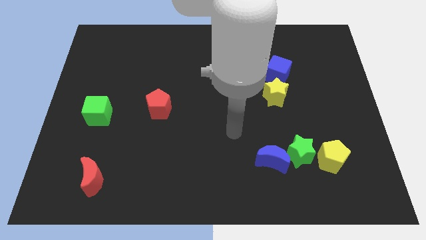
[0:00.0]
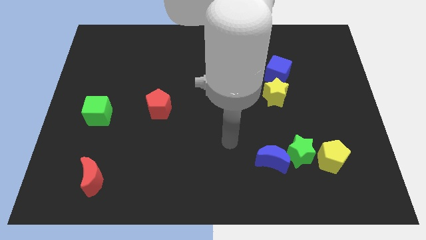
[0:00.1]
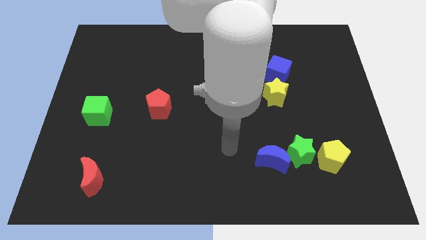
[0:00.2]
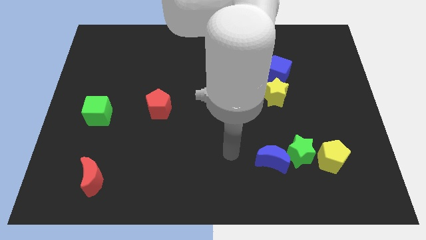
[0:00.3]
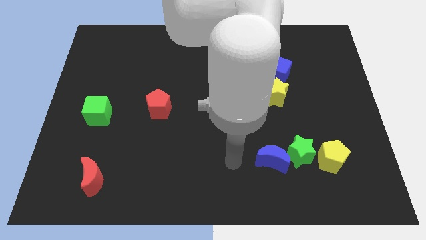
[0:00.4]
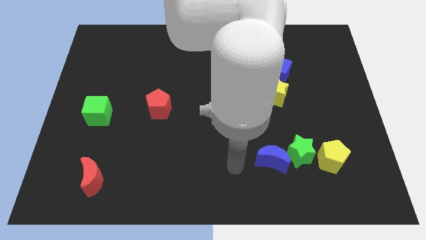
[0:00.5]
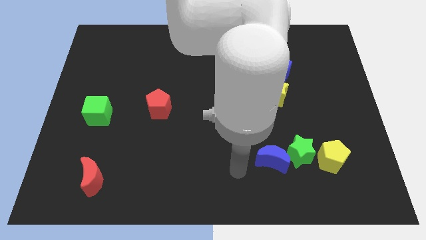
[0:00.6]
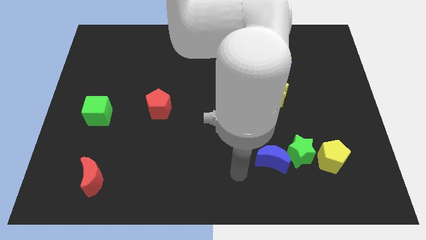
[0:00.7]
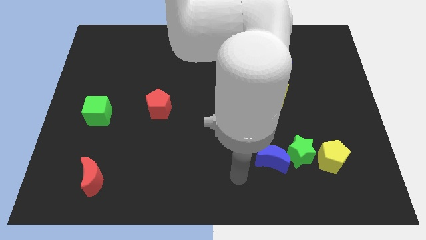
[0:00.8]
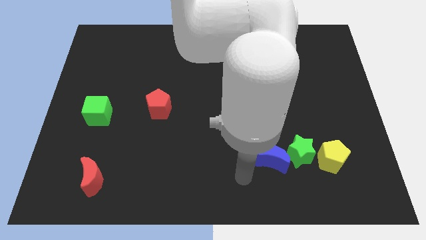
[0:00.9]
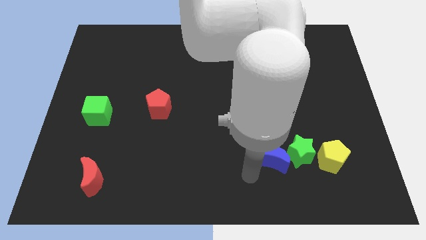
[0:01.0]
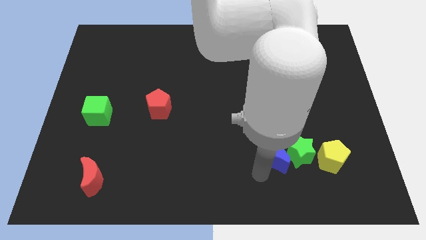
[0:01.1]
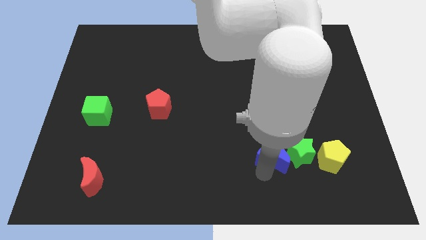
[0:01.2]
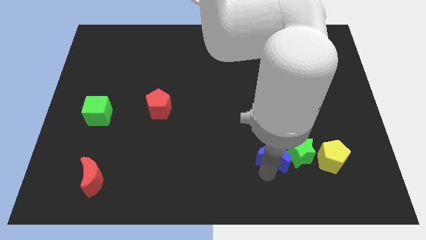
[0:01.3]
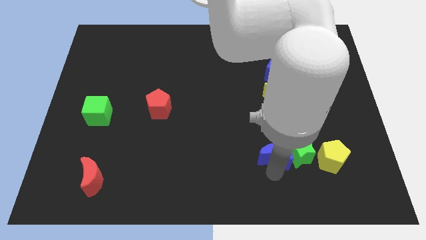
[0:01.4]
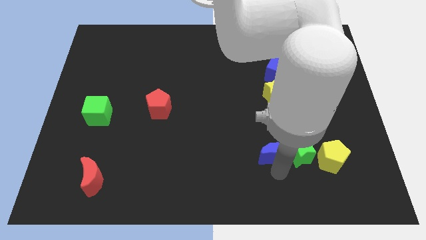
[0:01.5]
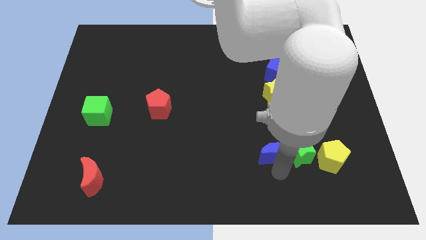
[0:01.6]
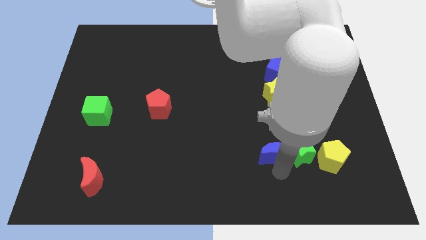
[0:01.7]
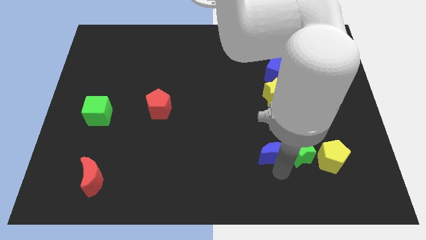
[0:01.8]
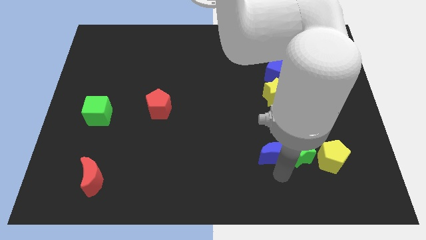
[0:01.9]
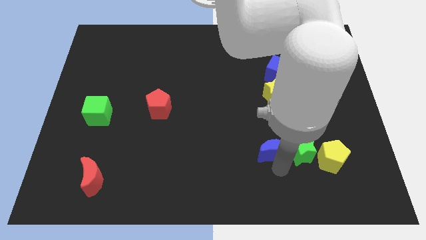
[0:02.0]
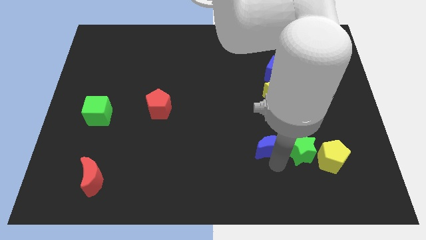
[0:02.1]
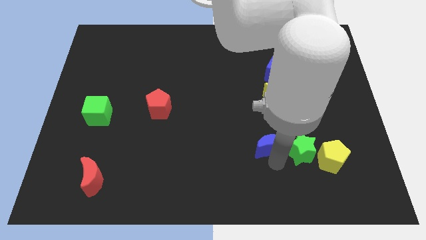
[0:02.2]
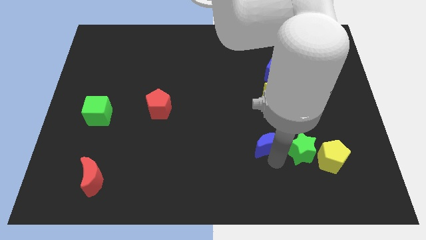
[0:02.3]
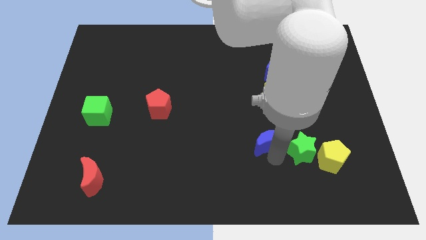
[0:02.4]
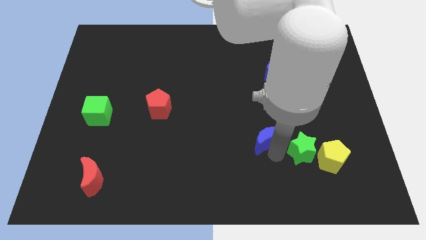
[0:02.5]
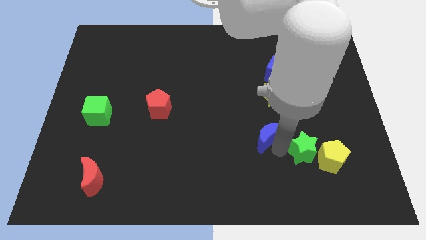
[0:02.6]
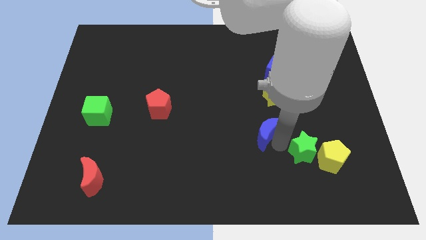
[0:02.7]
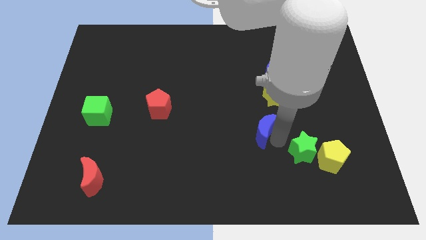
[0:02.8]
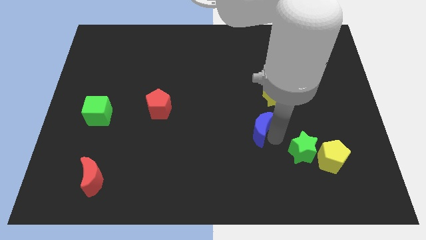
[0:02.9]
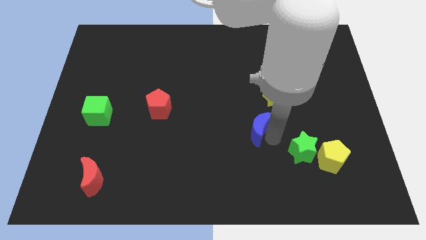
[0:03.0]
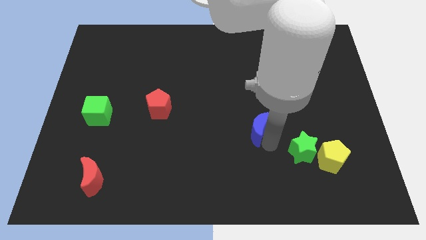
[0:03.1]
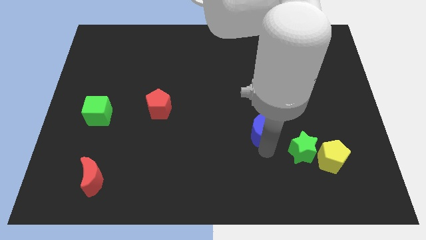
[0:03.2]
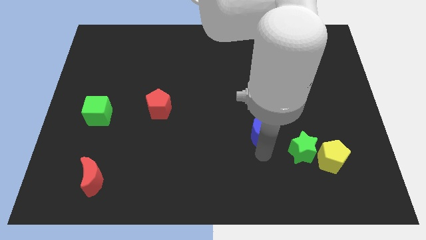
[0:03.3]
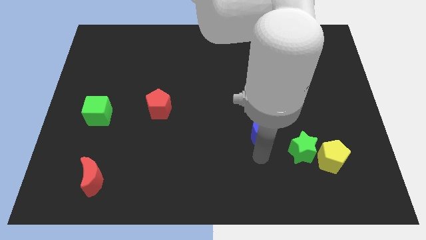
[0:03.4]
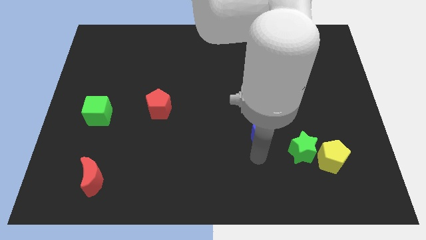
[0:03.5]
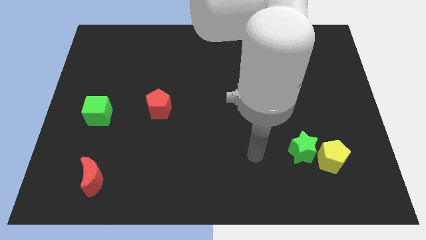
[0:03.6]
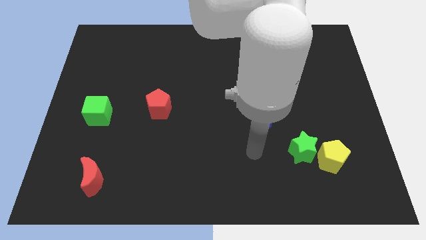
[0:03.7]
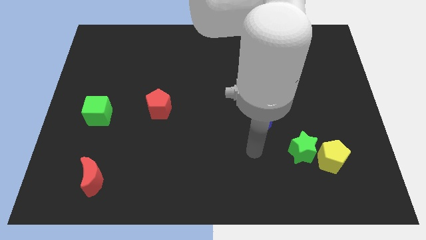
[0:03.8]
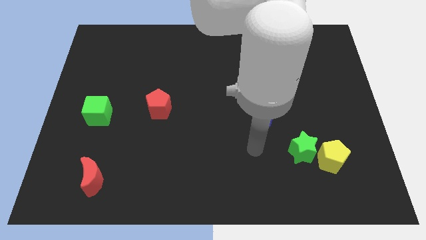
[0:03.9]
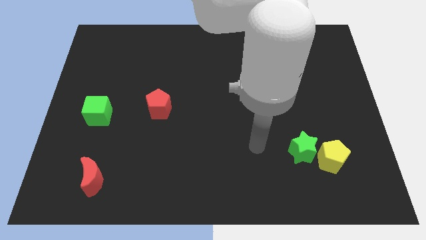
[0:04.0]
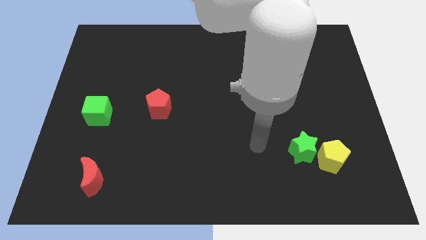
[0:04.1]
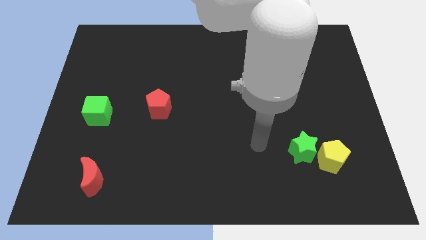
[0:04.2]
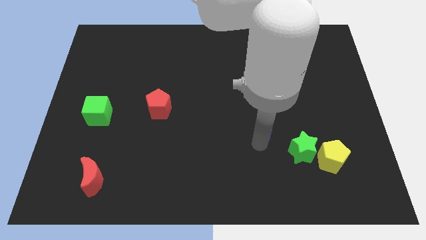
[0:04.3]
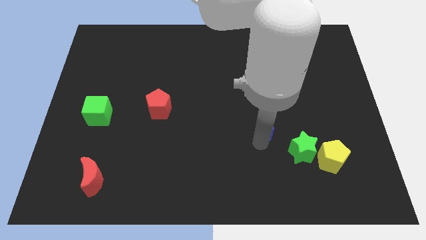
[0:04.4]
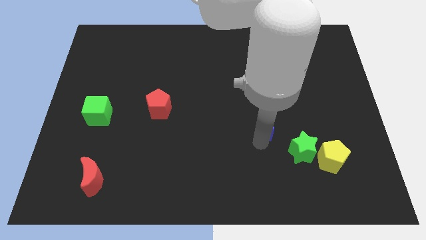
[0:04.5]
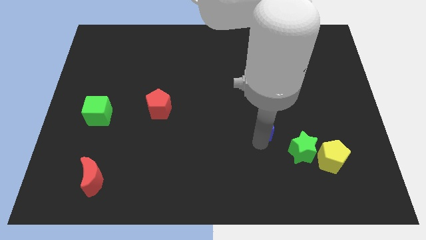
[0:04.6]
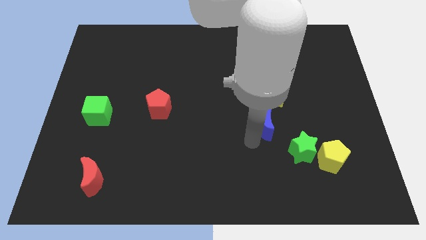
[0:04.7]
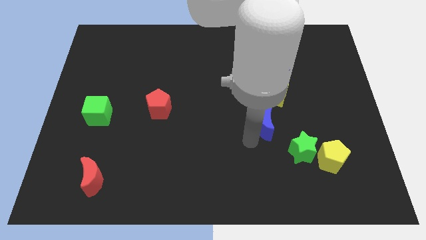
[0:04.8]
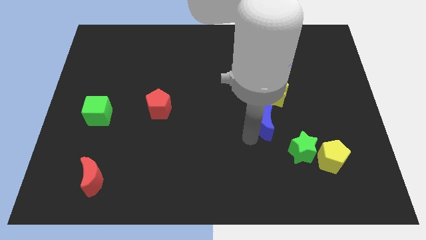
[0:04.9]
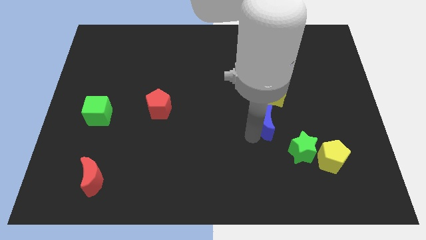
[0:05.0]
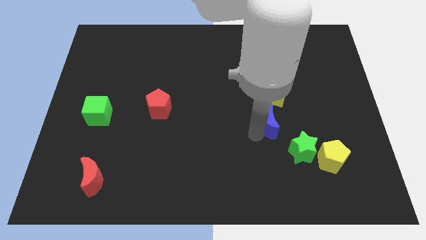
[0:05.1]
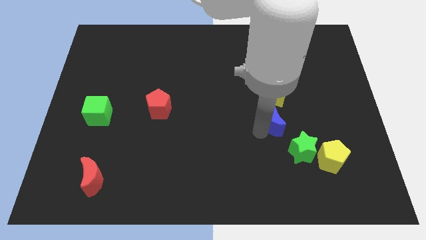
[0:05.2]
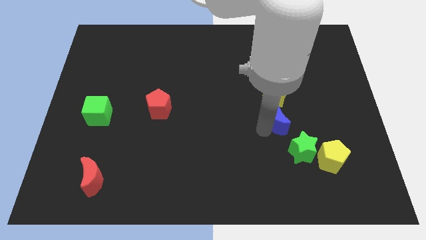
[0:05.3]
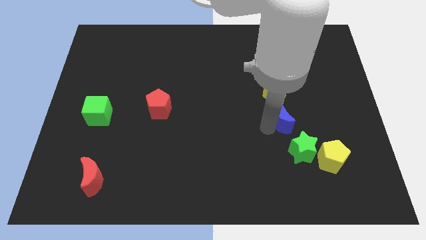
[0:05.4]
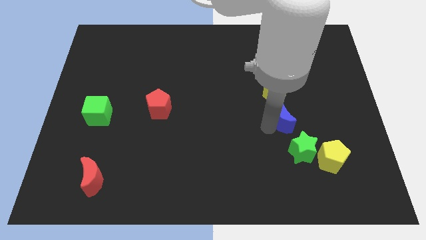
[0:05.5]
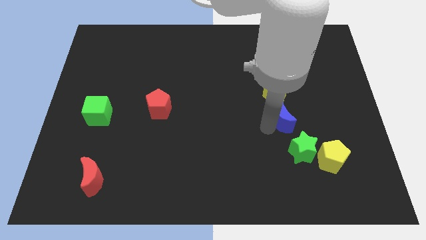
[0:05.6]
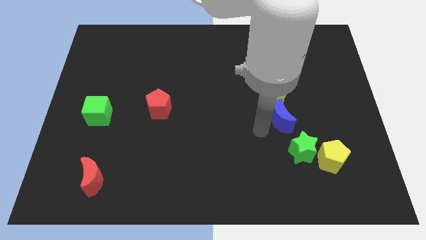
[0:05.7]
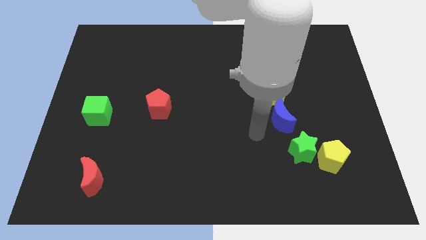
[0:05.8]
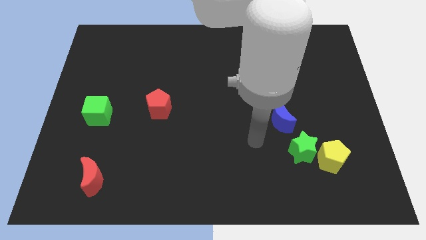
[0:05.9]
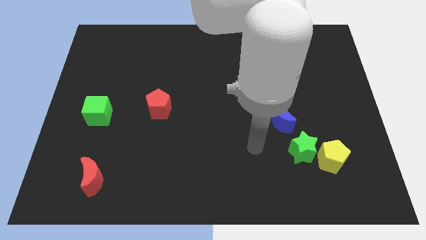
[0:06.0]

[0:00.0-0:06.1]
move the blue moon to the bottom side of the yellow star

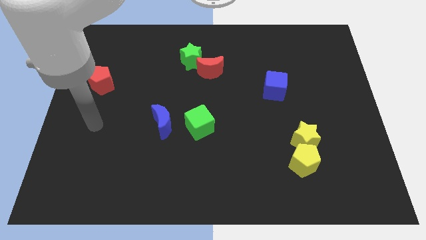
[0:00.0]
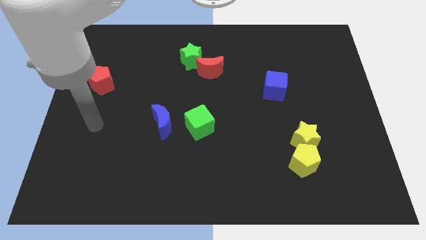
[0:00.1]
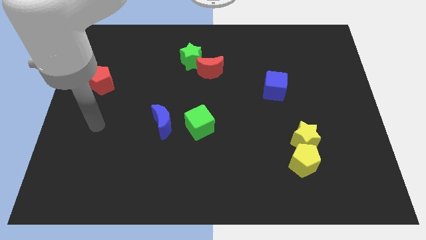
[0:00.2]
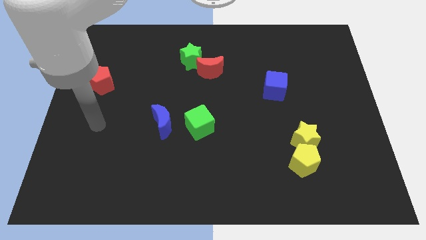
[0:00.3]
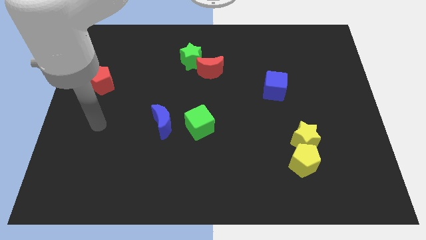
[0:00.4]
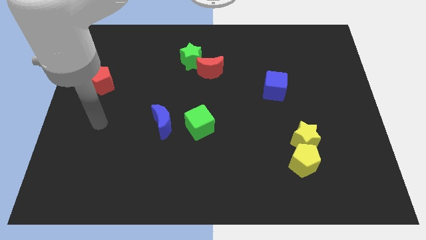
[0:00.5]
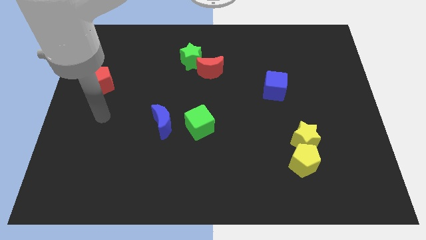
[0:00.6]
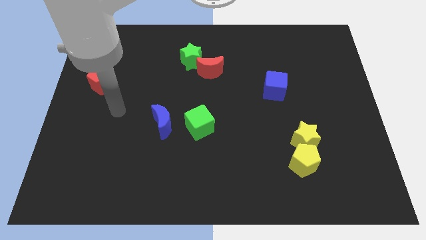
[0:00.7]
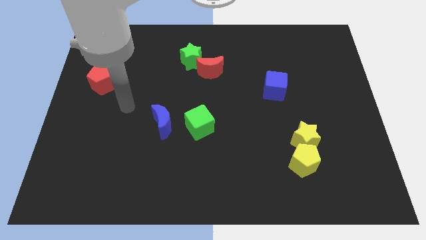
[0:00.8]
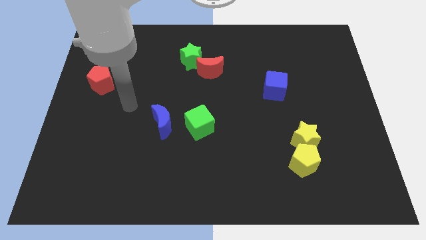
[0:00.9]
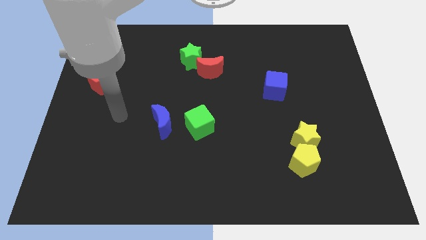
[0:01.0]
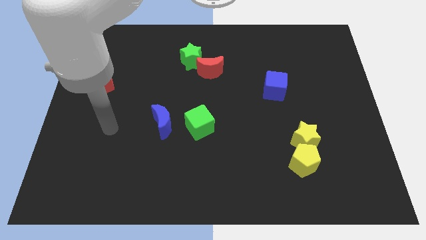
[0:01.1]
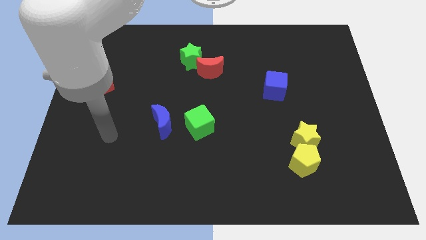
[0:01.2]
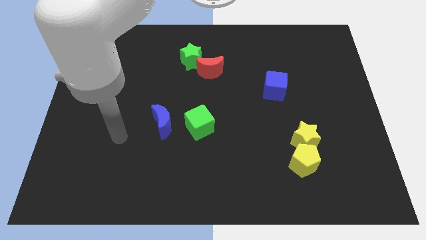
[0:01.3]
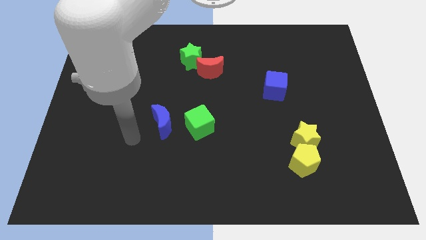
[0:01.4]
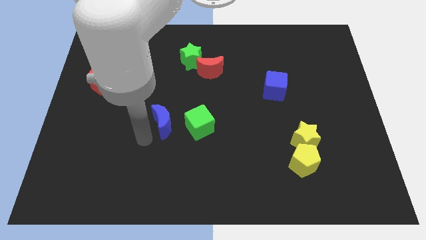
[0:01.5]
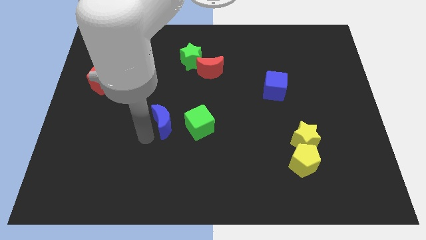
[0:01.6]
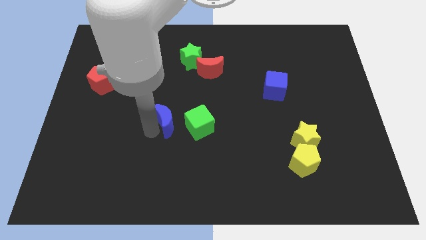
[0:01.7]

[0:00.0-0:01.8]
point your arm left to blue moon

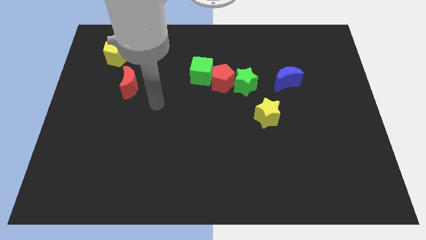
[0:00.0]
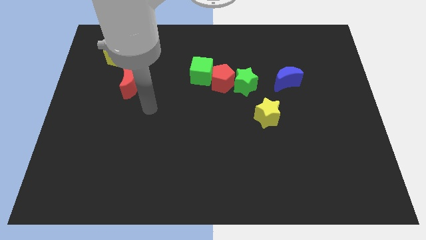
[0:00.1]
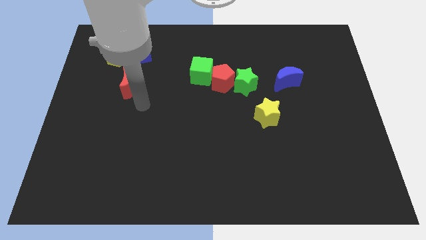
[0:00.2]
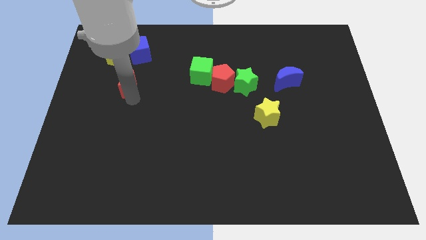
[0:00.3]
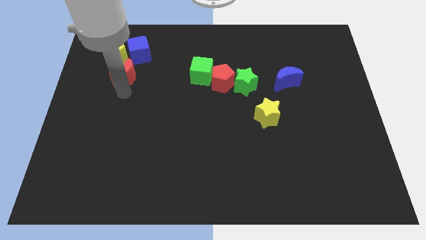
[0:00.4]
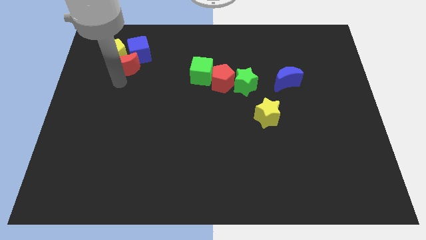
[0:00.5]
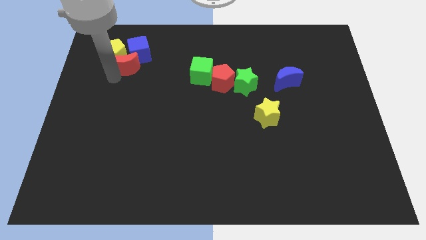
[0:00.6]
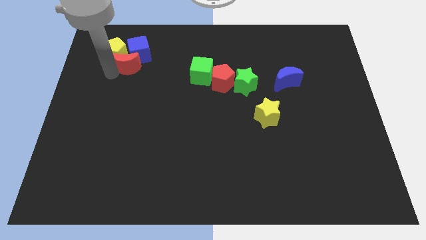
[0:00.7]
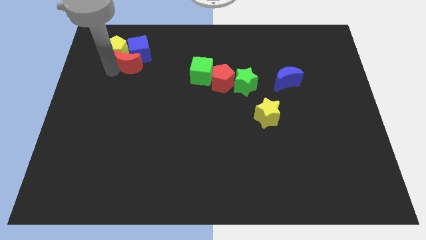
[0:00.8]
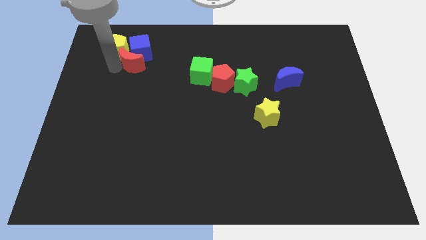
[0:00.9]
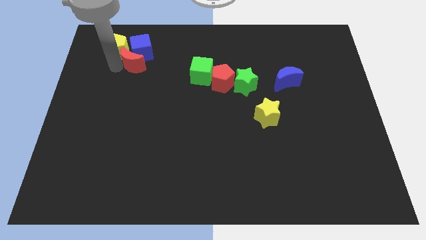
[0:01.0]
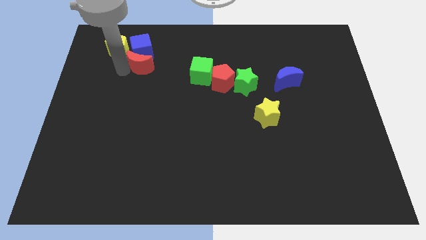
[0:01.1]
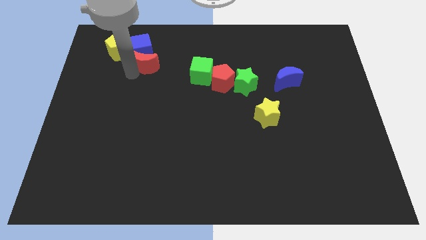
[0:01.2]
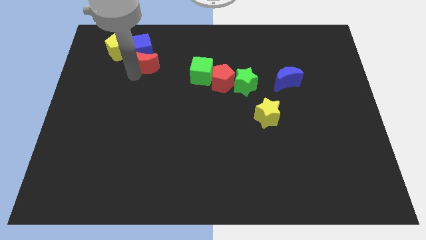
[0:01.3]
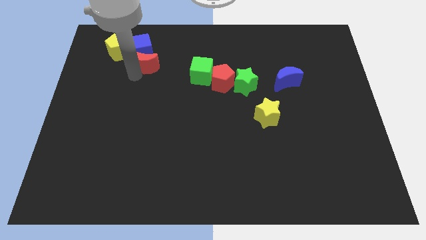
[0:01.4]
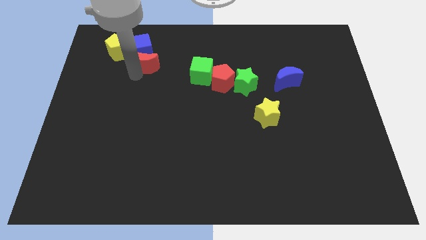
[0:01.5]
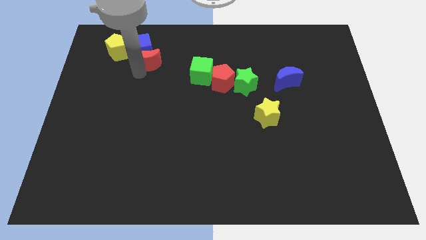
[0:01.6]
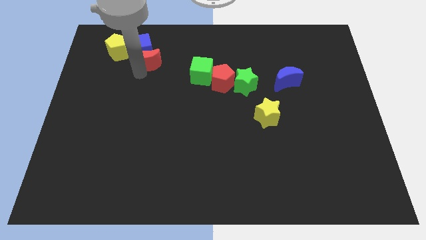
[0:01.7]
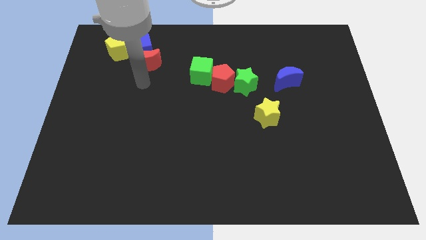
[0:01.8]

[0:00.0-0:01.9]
move the red crescent to the bottom of the blue cube
